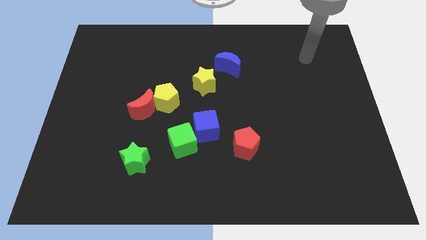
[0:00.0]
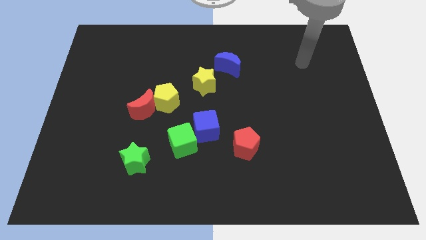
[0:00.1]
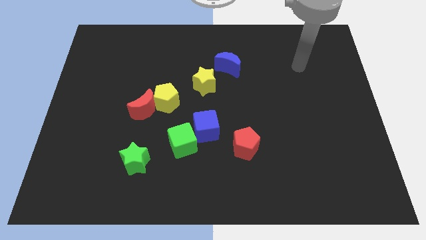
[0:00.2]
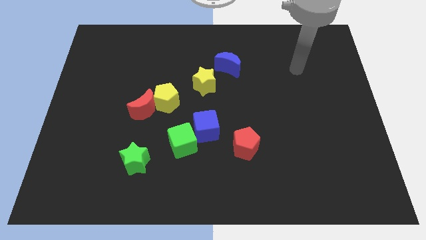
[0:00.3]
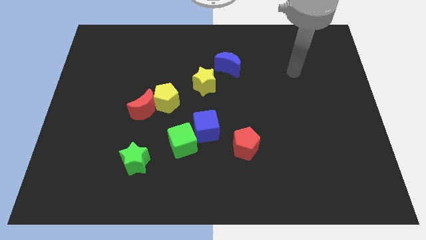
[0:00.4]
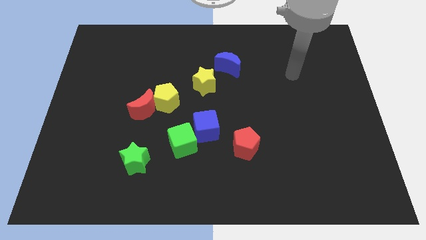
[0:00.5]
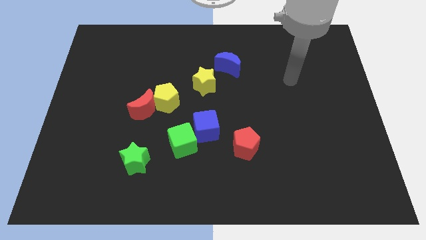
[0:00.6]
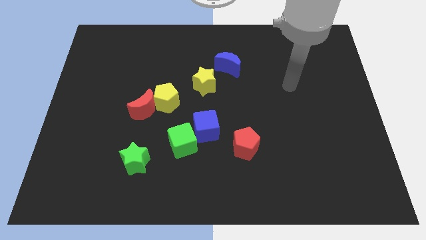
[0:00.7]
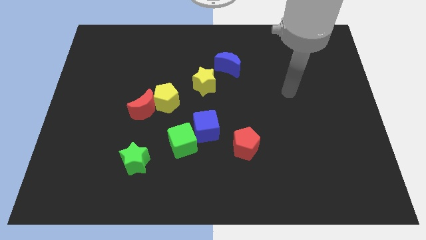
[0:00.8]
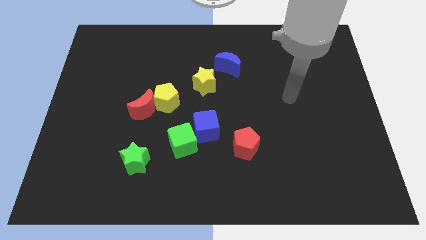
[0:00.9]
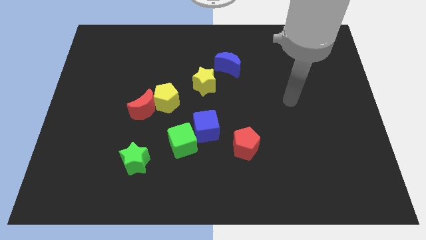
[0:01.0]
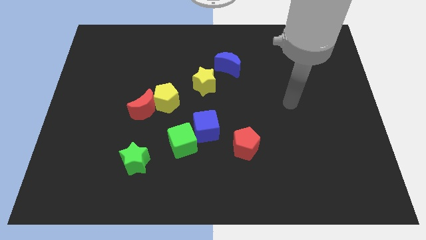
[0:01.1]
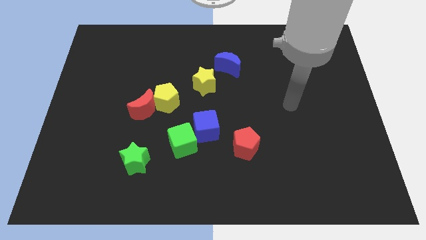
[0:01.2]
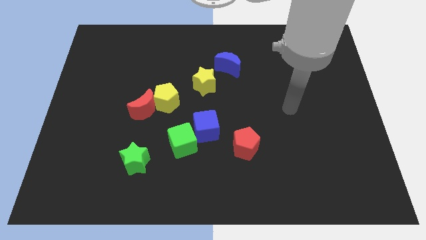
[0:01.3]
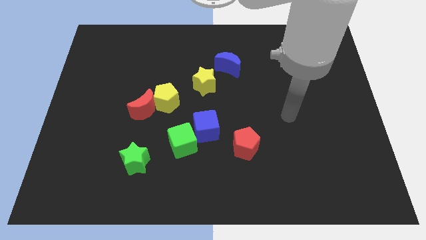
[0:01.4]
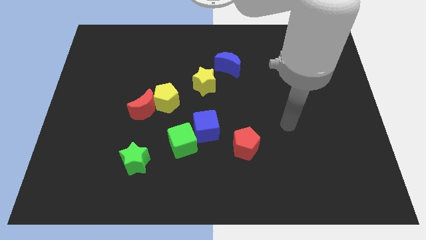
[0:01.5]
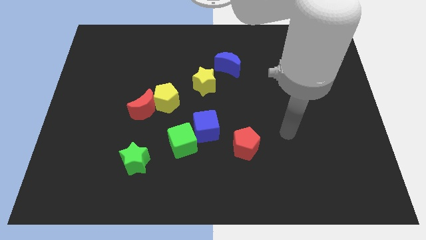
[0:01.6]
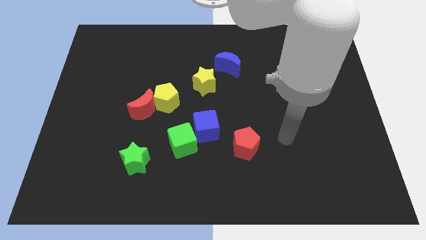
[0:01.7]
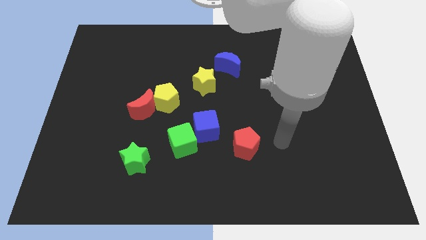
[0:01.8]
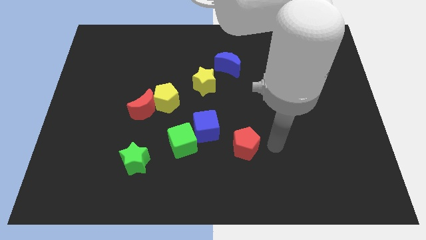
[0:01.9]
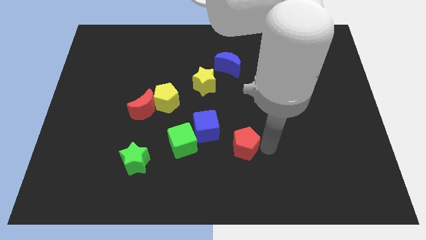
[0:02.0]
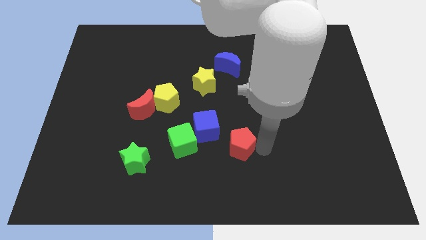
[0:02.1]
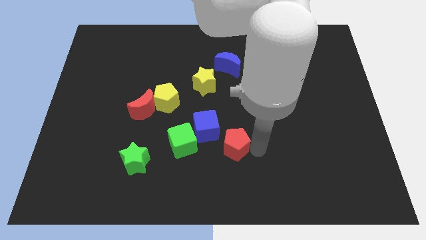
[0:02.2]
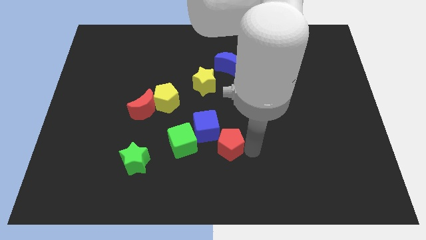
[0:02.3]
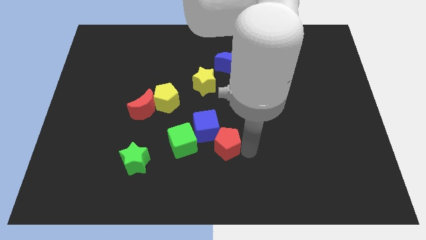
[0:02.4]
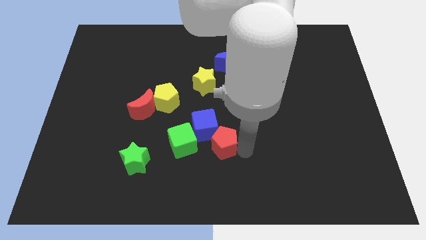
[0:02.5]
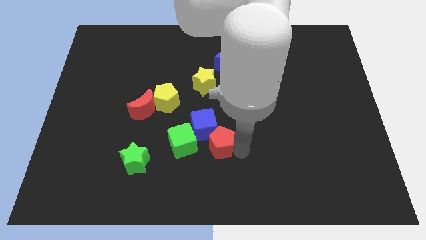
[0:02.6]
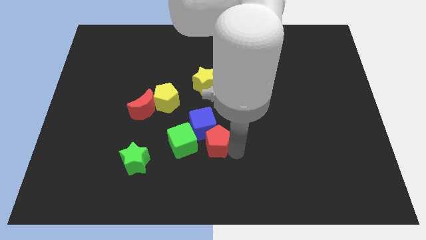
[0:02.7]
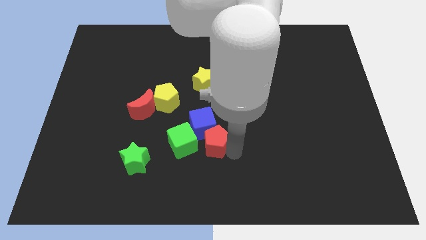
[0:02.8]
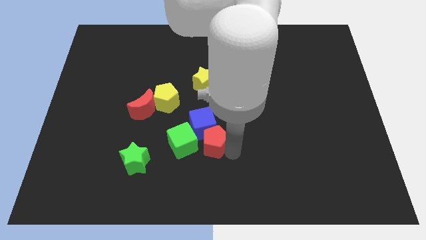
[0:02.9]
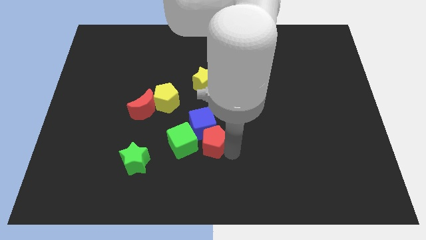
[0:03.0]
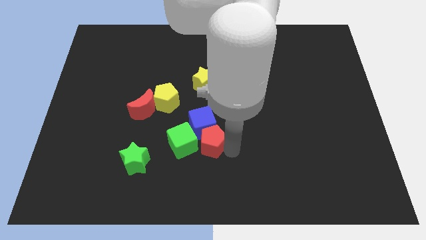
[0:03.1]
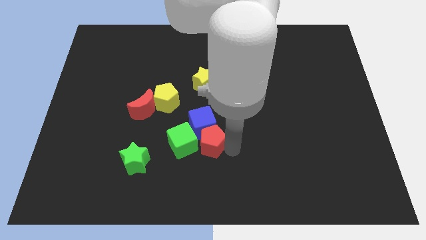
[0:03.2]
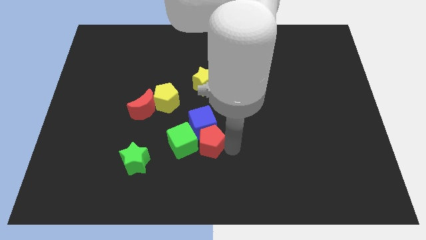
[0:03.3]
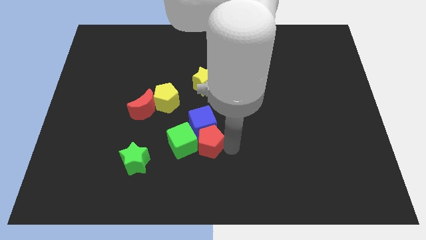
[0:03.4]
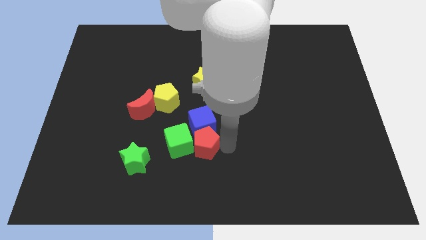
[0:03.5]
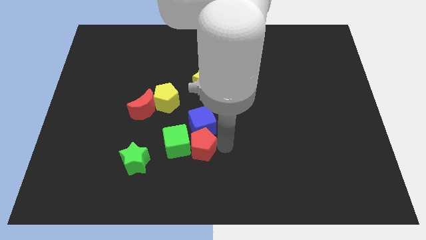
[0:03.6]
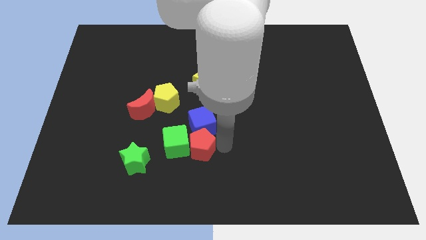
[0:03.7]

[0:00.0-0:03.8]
place the red pentagon to the right side of the green cube

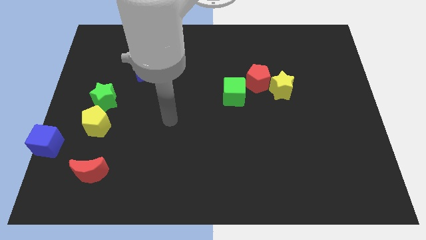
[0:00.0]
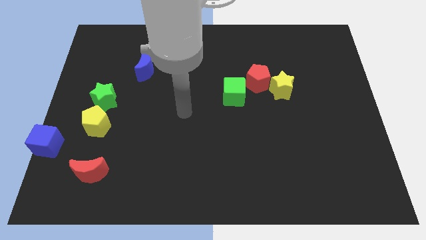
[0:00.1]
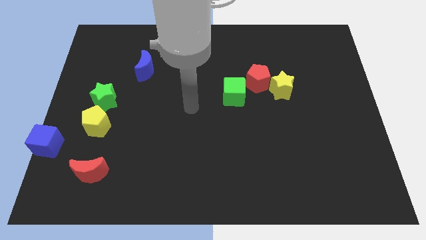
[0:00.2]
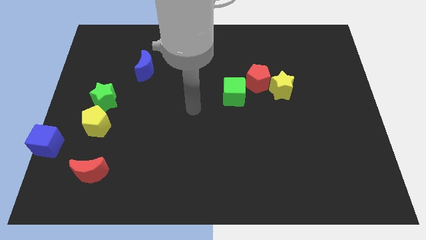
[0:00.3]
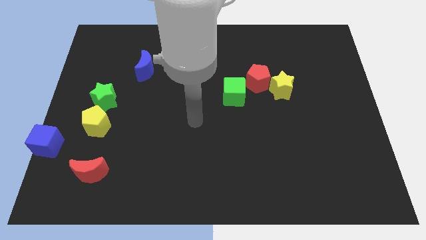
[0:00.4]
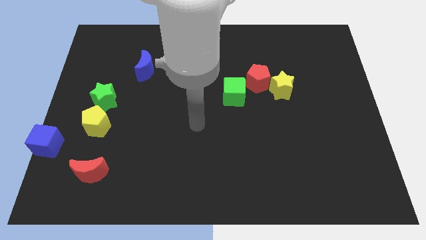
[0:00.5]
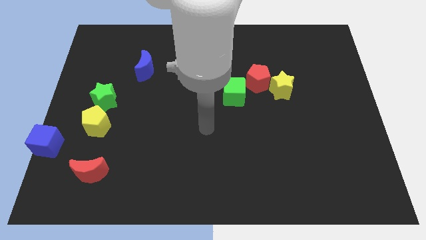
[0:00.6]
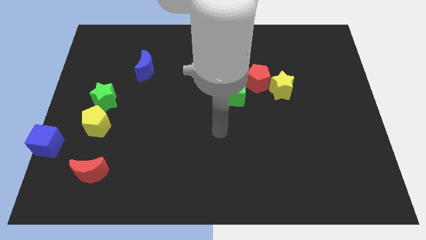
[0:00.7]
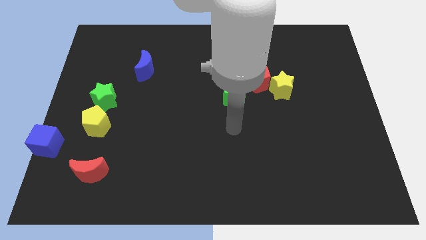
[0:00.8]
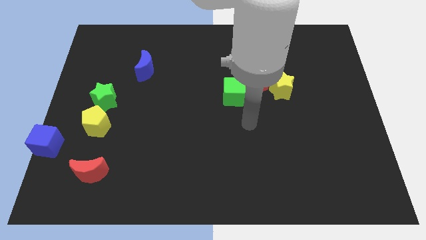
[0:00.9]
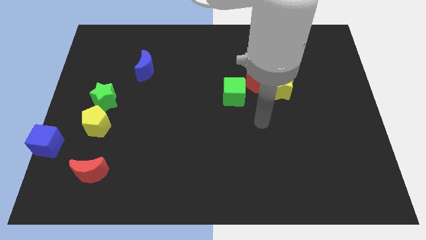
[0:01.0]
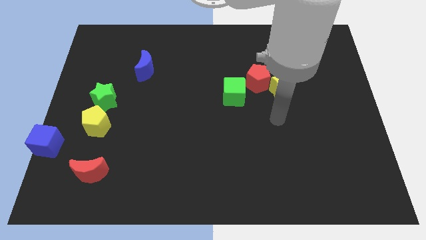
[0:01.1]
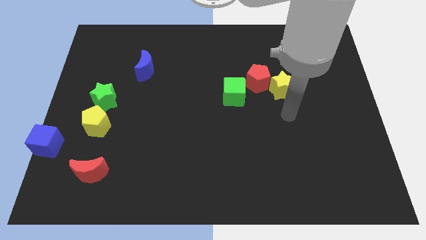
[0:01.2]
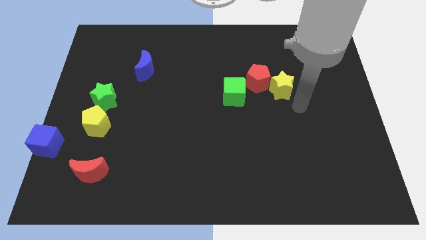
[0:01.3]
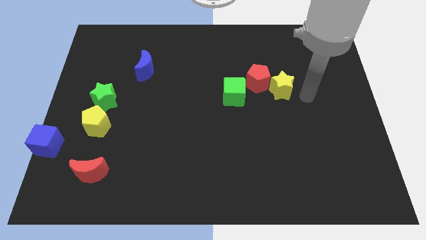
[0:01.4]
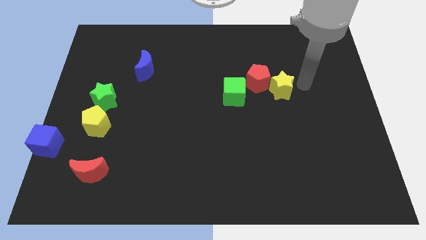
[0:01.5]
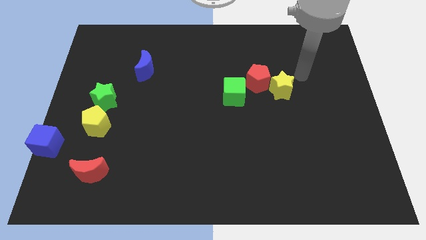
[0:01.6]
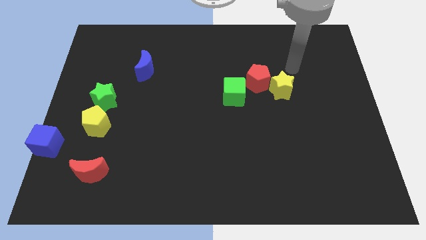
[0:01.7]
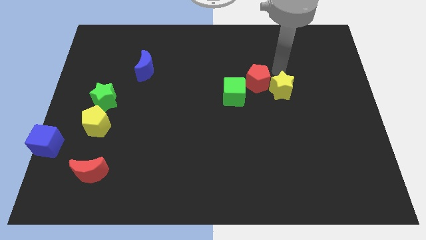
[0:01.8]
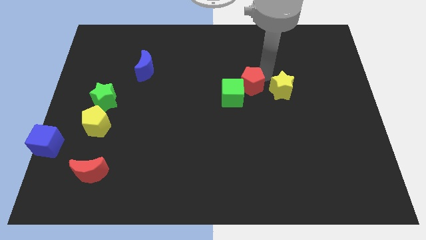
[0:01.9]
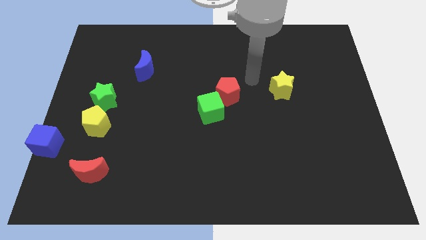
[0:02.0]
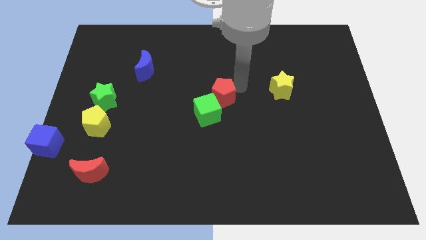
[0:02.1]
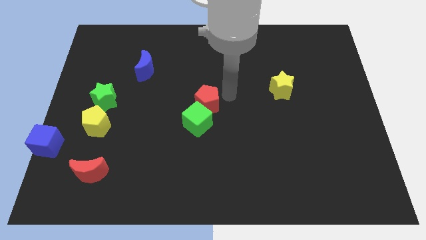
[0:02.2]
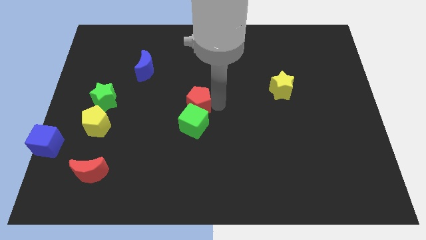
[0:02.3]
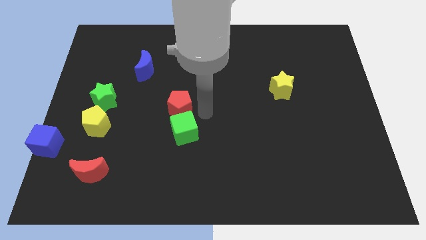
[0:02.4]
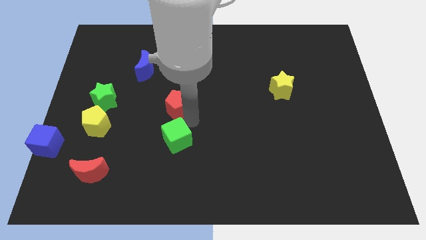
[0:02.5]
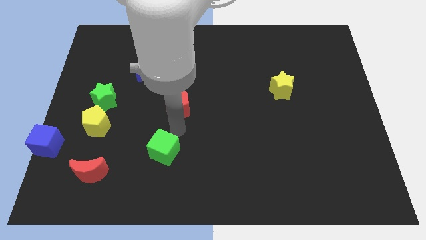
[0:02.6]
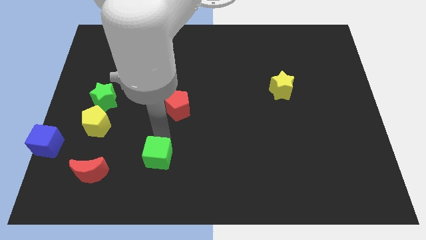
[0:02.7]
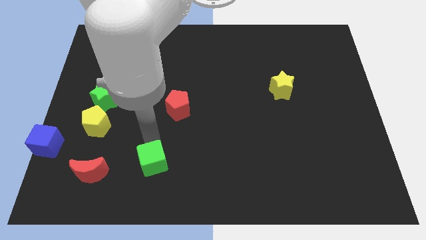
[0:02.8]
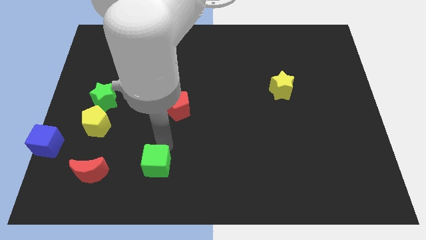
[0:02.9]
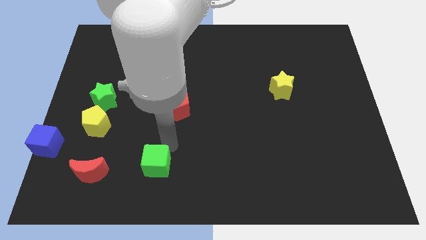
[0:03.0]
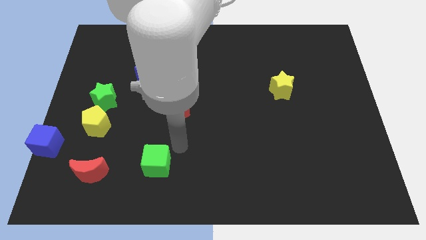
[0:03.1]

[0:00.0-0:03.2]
separate red pentagon and green cube from each other

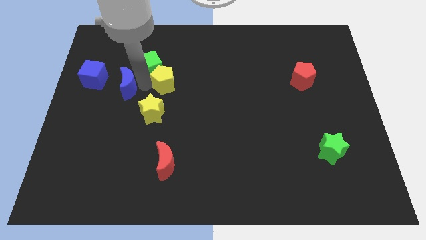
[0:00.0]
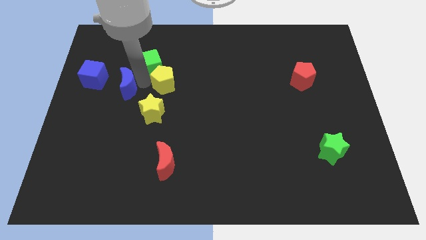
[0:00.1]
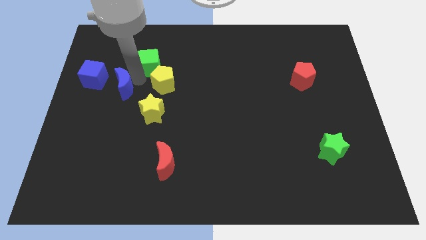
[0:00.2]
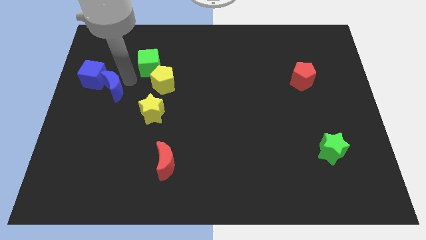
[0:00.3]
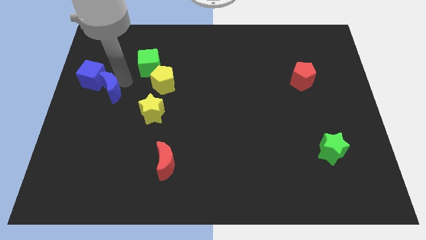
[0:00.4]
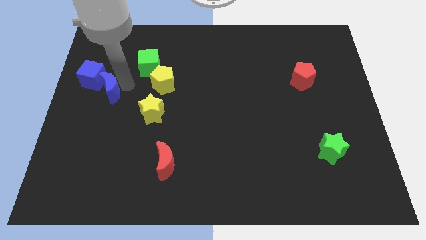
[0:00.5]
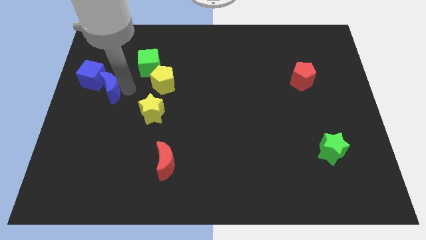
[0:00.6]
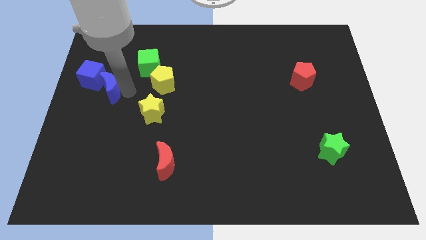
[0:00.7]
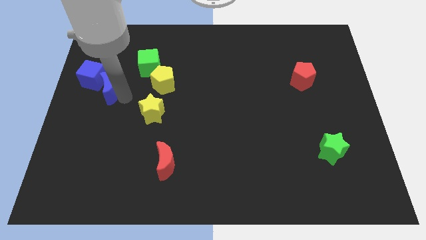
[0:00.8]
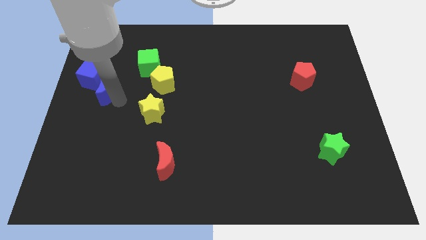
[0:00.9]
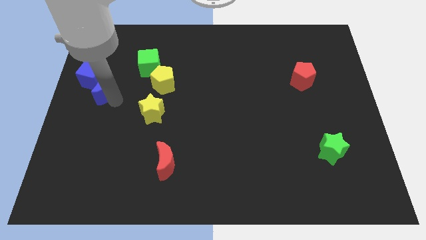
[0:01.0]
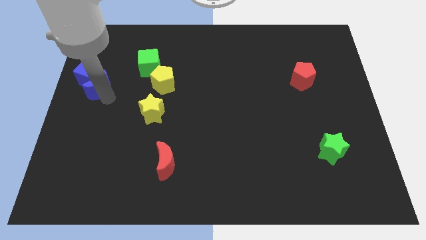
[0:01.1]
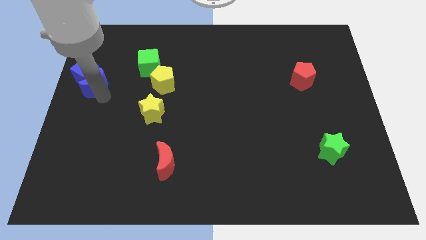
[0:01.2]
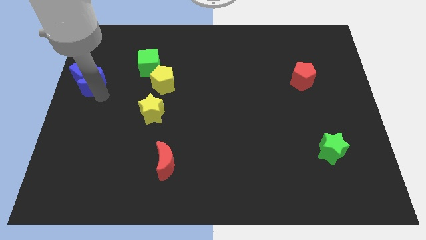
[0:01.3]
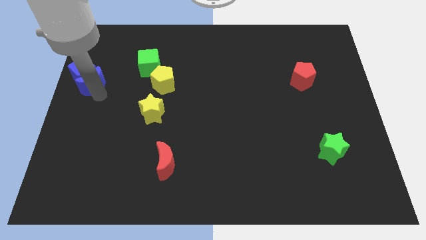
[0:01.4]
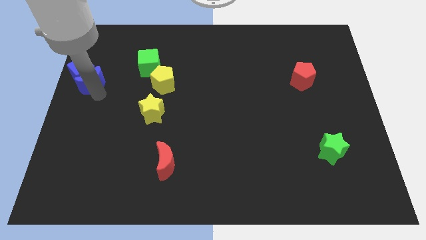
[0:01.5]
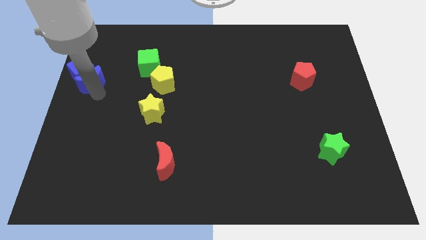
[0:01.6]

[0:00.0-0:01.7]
push the blue crescent into the blue cube
